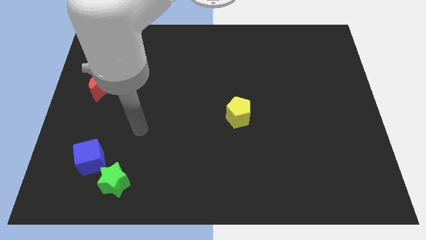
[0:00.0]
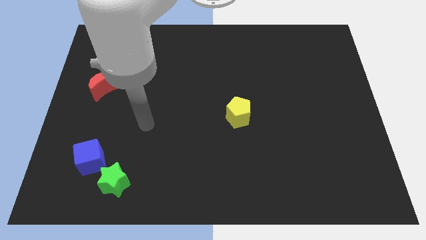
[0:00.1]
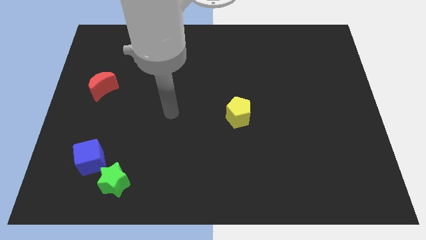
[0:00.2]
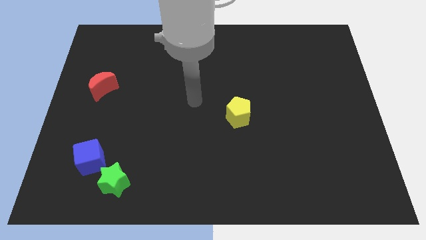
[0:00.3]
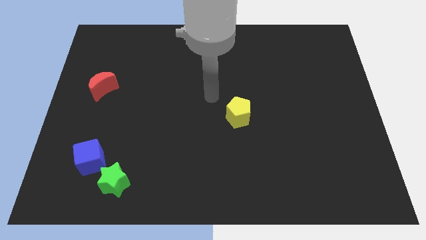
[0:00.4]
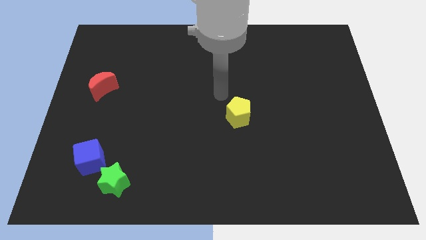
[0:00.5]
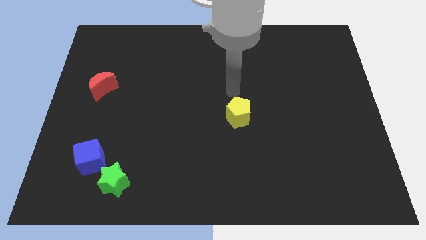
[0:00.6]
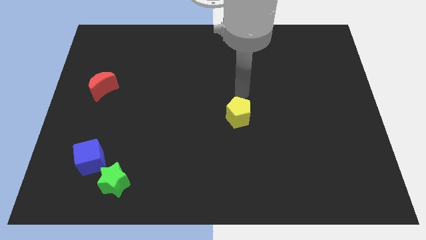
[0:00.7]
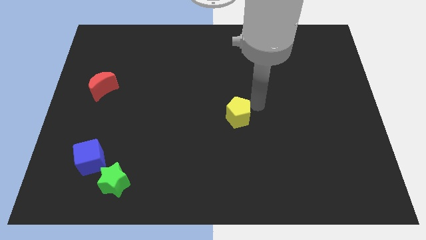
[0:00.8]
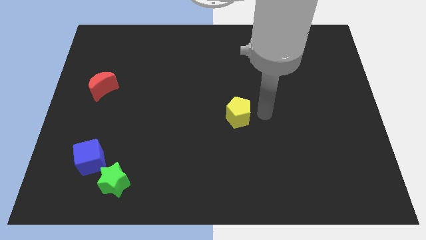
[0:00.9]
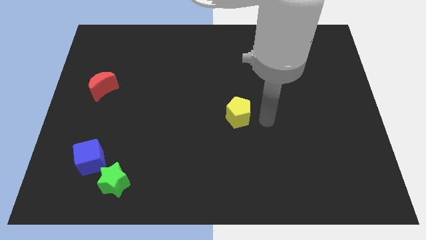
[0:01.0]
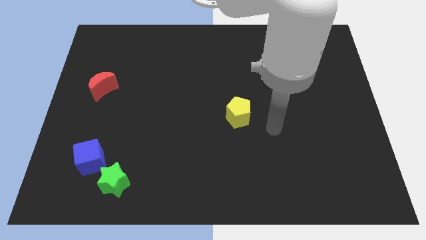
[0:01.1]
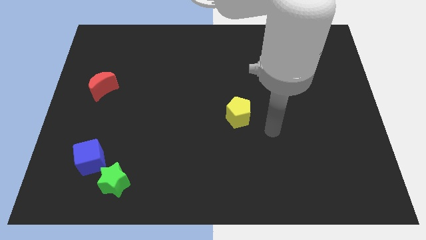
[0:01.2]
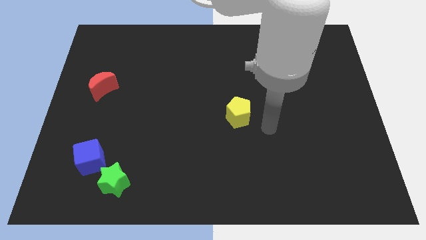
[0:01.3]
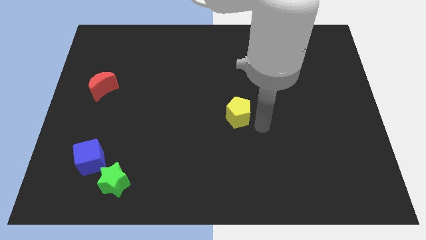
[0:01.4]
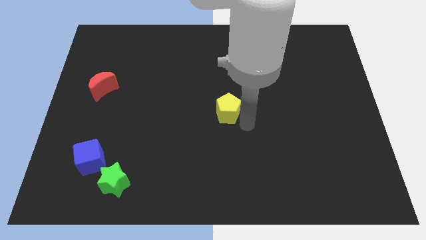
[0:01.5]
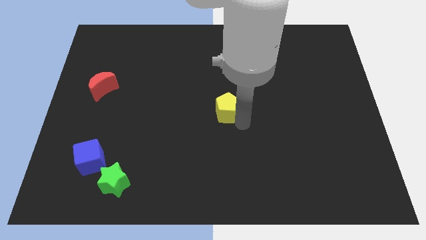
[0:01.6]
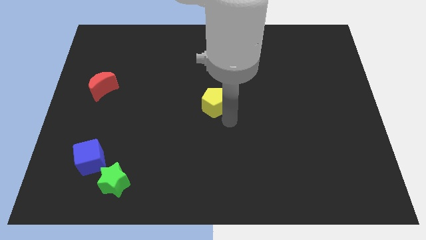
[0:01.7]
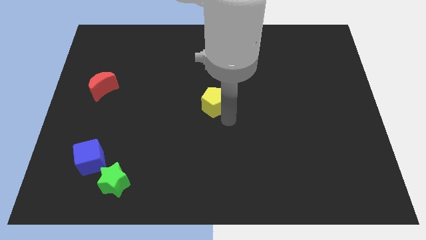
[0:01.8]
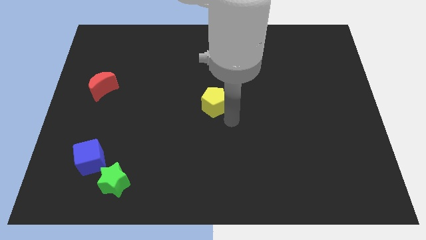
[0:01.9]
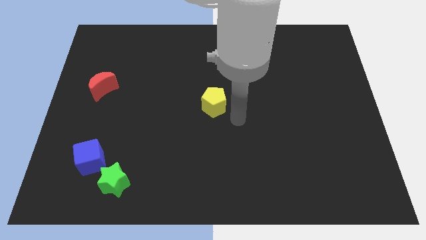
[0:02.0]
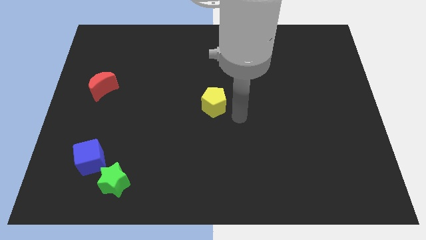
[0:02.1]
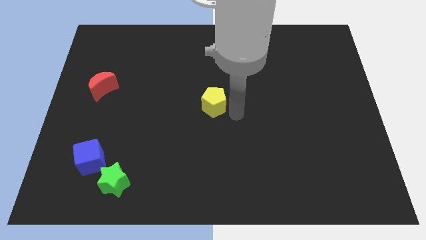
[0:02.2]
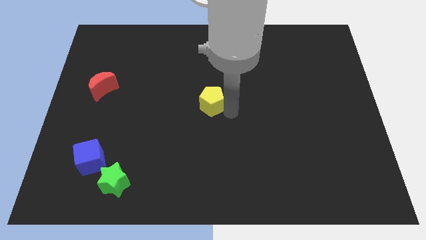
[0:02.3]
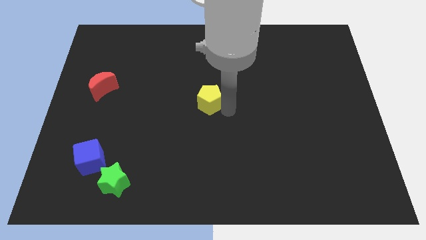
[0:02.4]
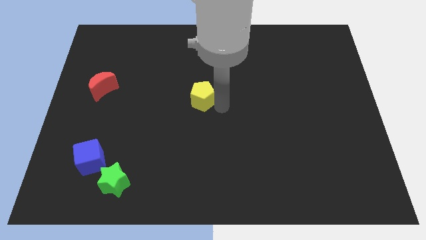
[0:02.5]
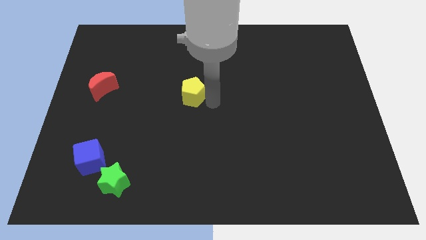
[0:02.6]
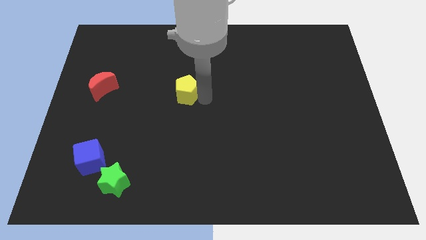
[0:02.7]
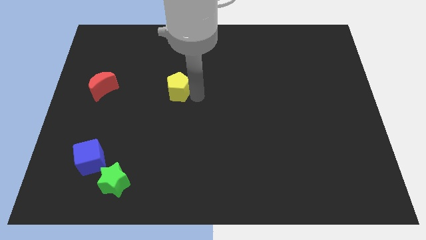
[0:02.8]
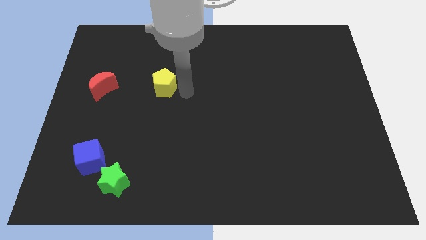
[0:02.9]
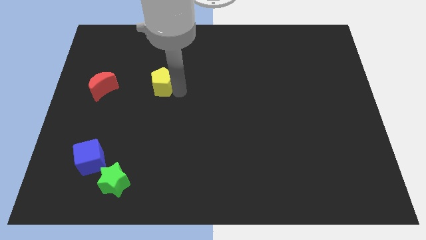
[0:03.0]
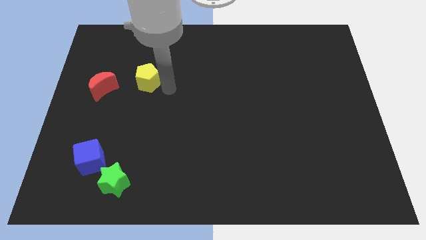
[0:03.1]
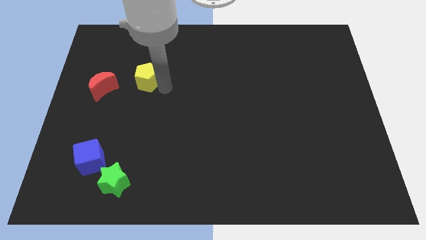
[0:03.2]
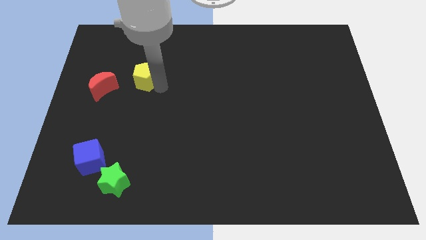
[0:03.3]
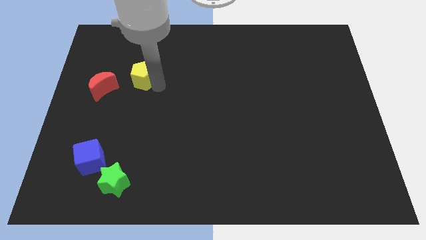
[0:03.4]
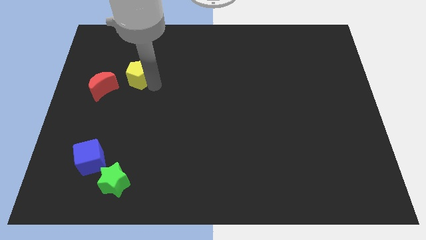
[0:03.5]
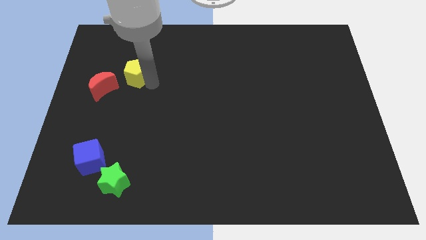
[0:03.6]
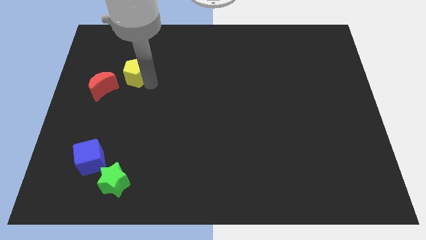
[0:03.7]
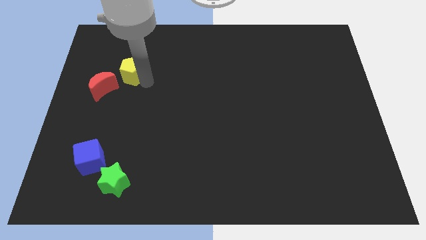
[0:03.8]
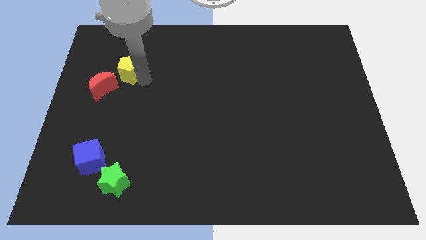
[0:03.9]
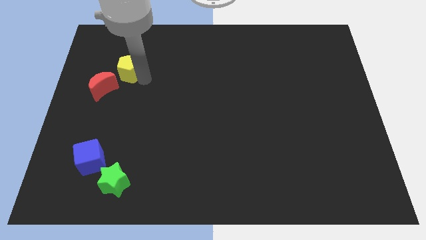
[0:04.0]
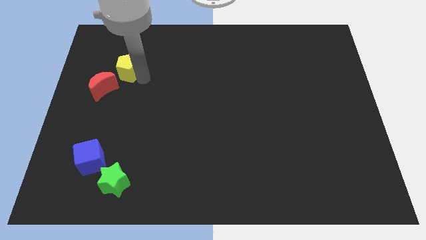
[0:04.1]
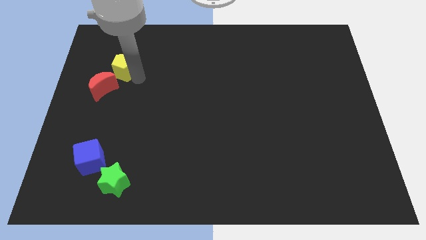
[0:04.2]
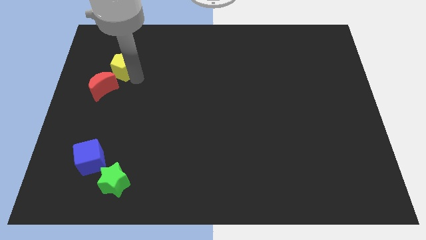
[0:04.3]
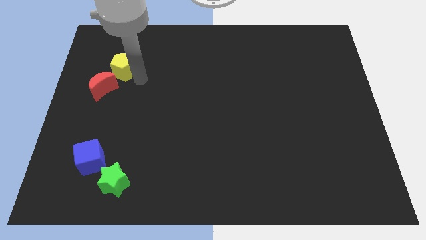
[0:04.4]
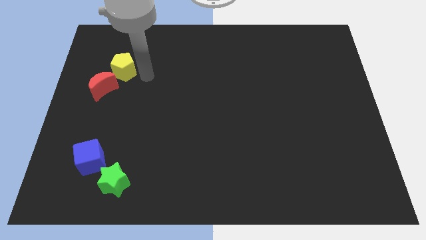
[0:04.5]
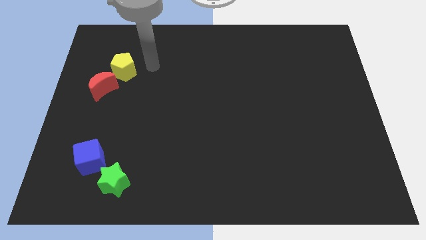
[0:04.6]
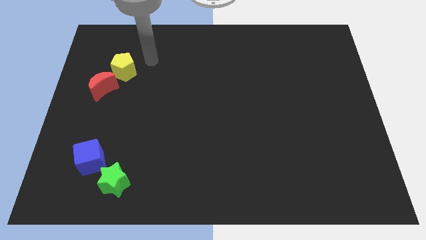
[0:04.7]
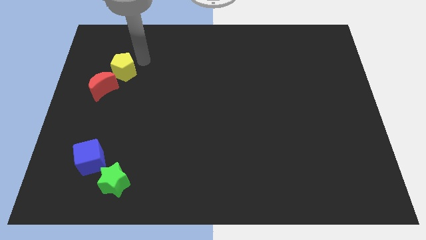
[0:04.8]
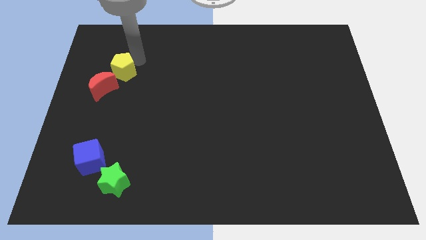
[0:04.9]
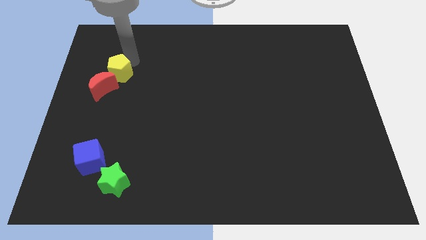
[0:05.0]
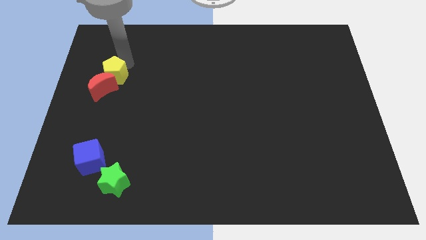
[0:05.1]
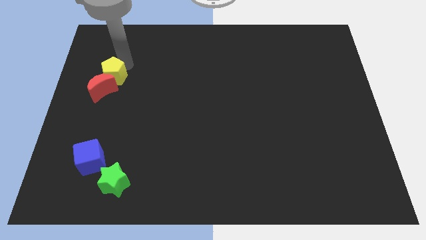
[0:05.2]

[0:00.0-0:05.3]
put the yellow pentagon towards the moon

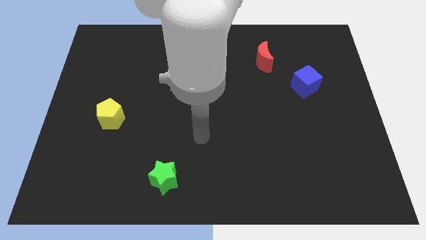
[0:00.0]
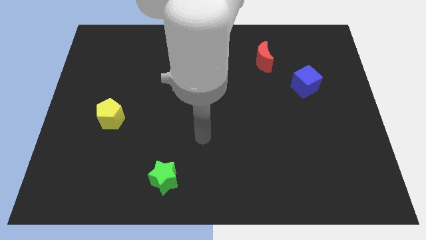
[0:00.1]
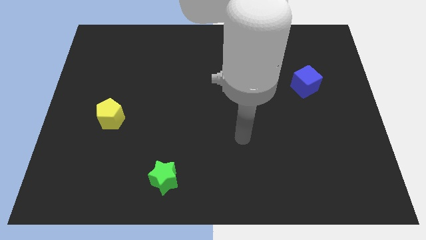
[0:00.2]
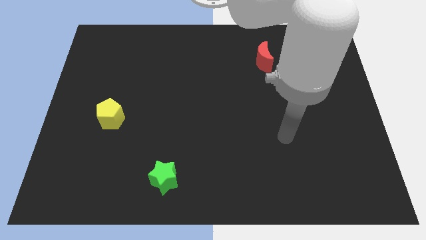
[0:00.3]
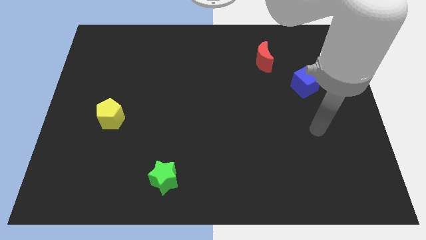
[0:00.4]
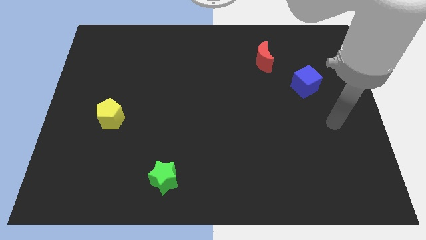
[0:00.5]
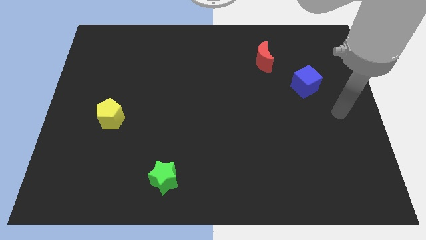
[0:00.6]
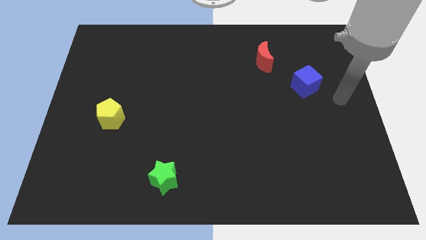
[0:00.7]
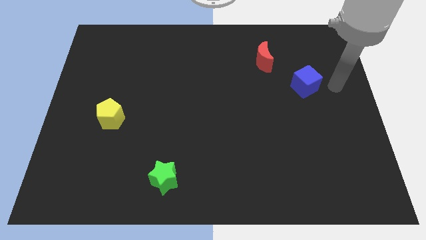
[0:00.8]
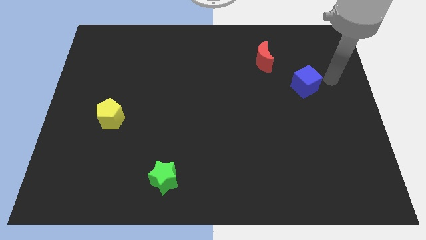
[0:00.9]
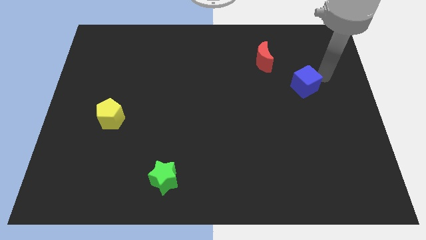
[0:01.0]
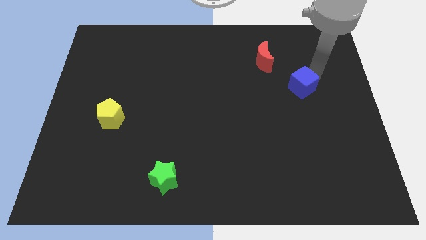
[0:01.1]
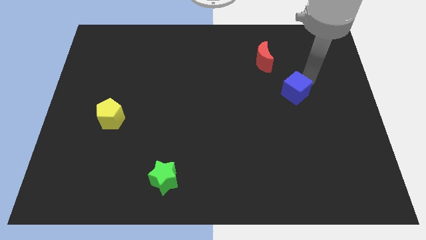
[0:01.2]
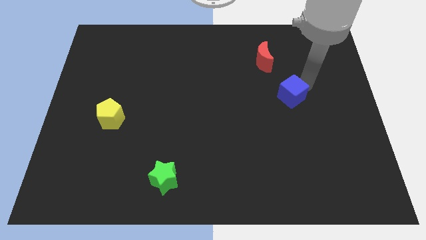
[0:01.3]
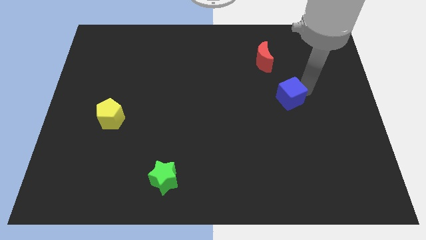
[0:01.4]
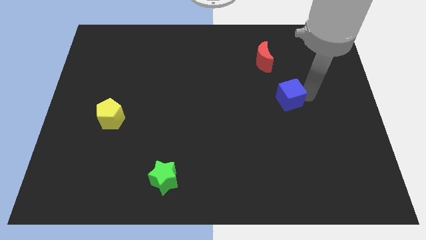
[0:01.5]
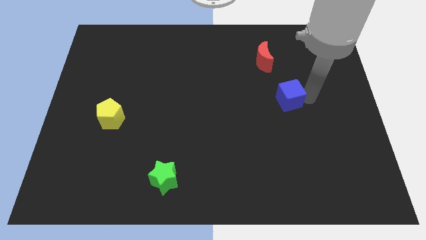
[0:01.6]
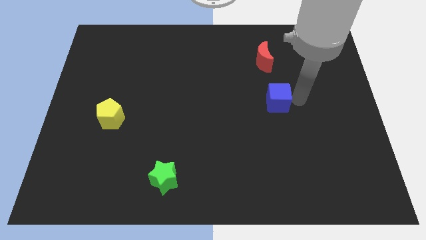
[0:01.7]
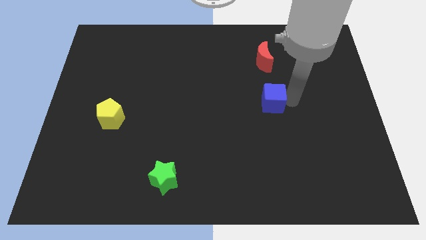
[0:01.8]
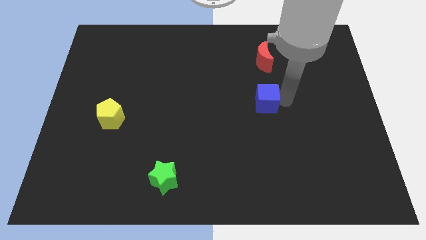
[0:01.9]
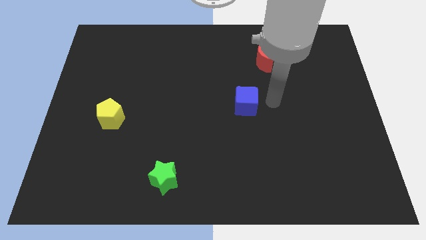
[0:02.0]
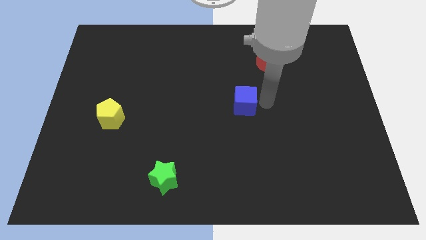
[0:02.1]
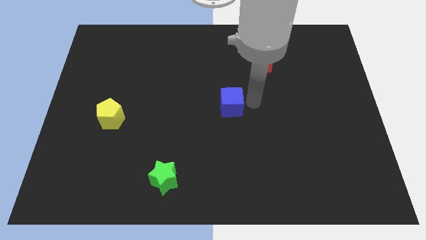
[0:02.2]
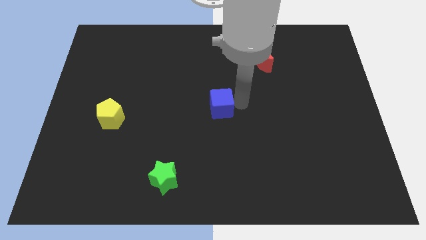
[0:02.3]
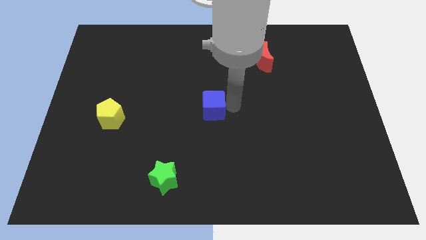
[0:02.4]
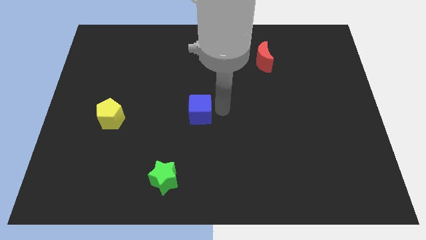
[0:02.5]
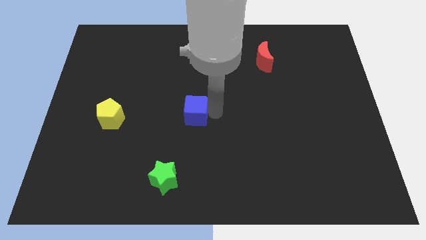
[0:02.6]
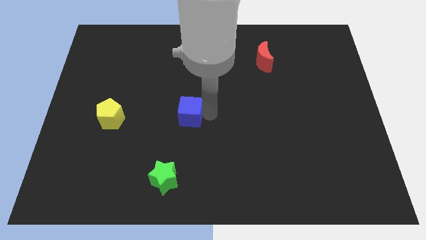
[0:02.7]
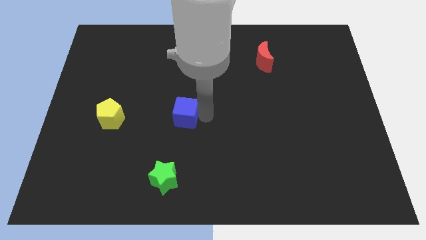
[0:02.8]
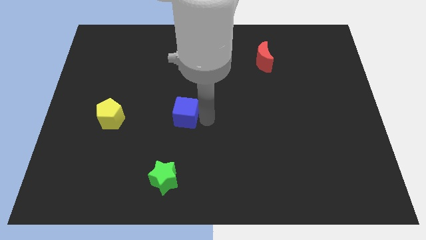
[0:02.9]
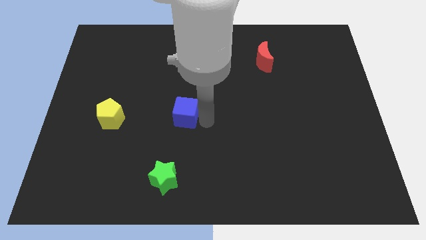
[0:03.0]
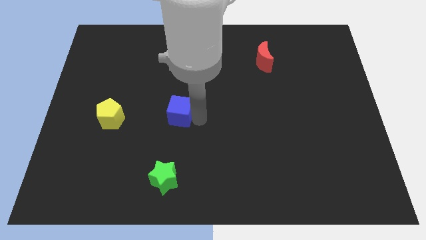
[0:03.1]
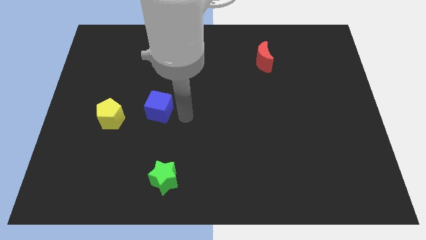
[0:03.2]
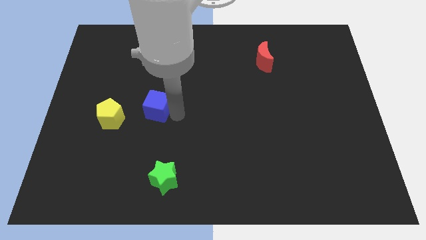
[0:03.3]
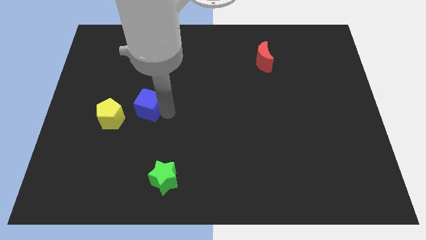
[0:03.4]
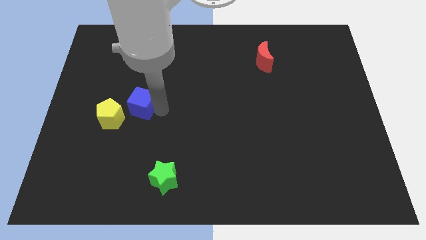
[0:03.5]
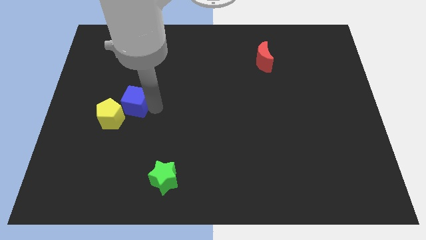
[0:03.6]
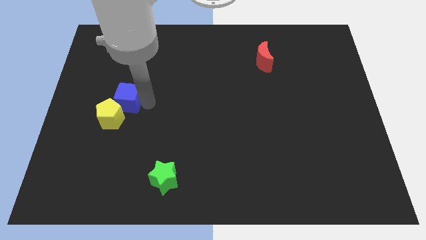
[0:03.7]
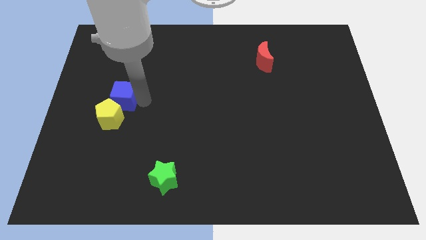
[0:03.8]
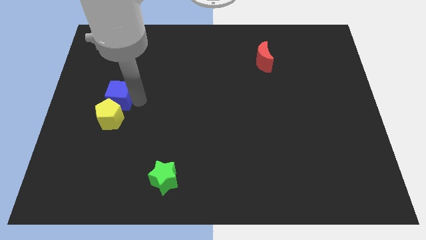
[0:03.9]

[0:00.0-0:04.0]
push the cube next to the yellow block
